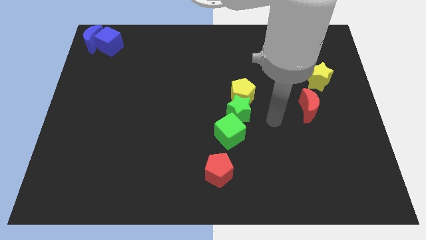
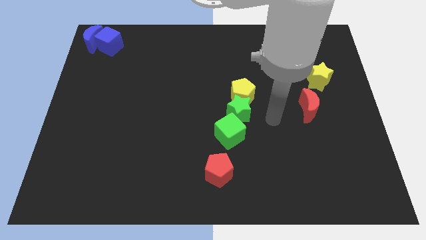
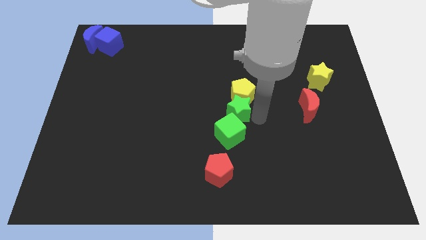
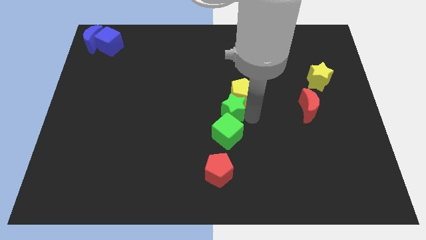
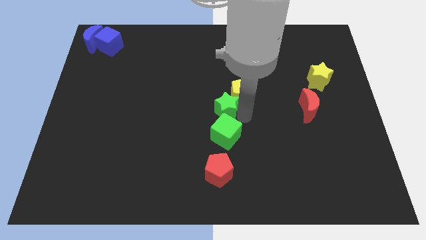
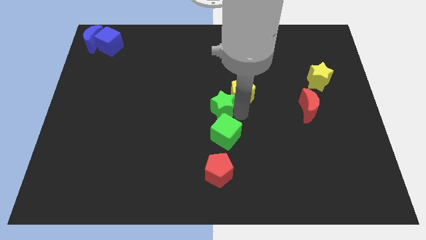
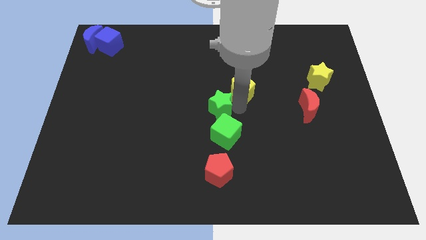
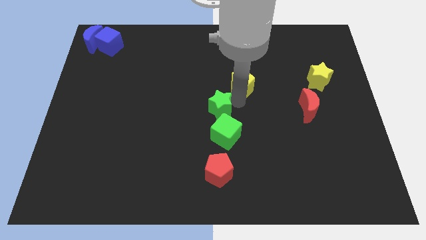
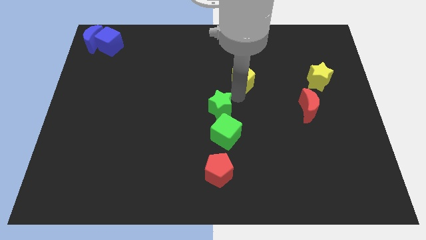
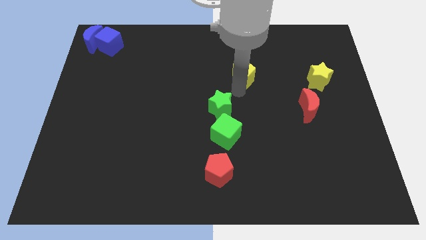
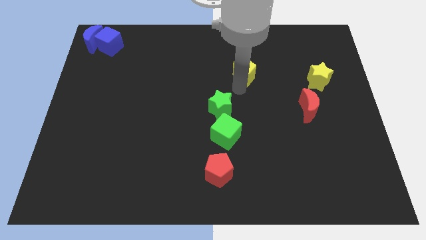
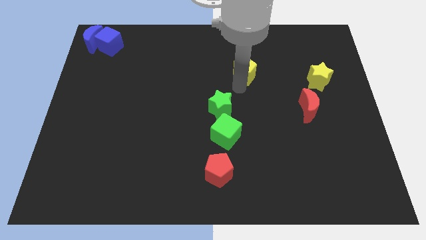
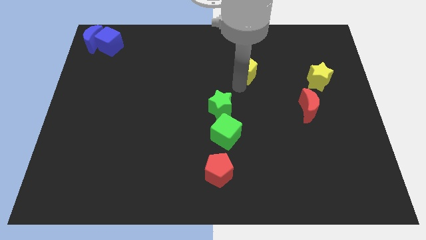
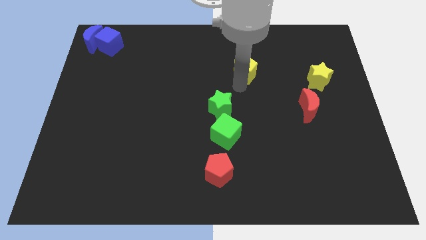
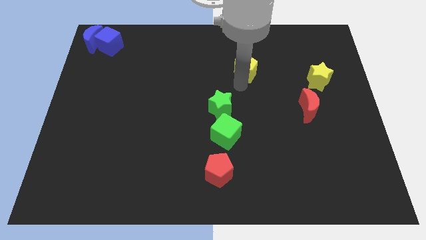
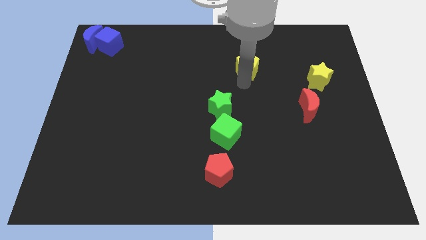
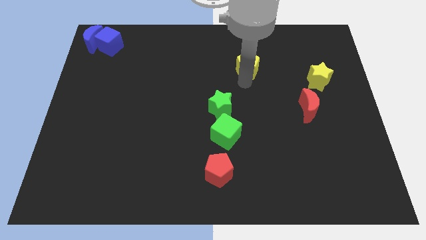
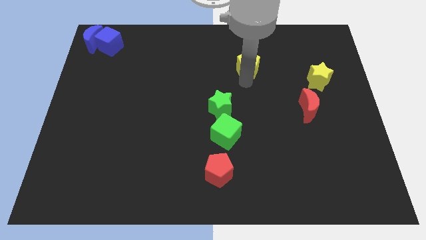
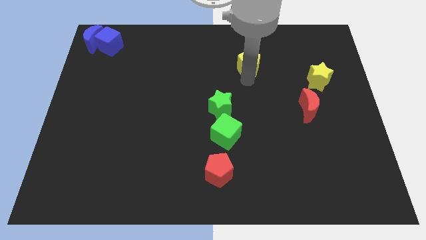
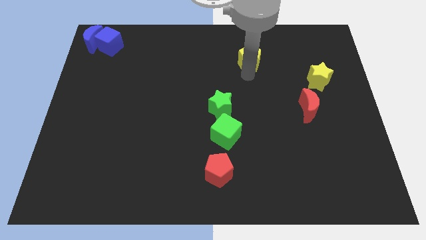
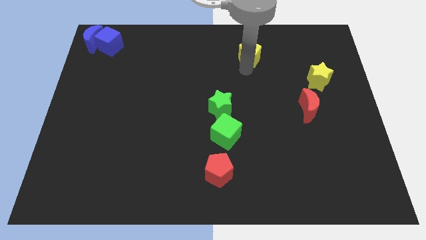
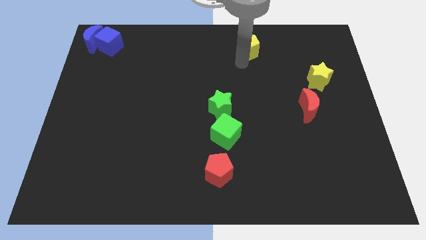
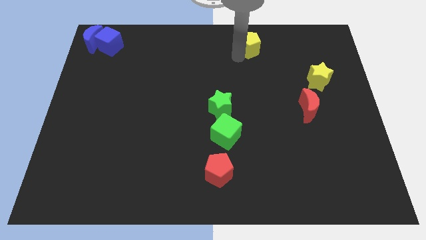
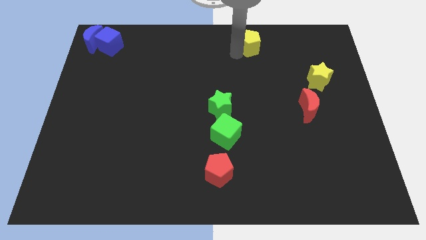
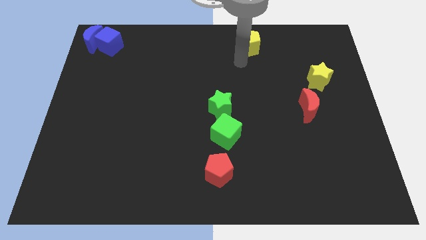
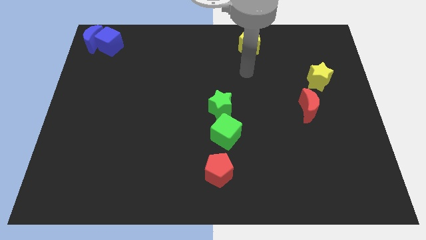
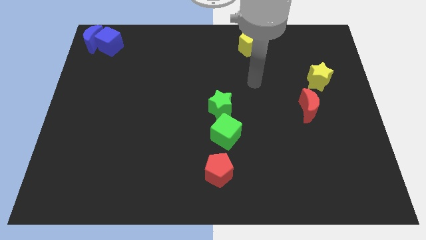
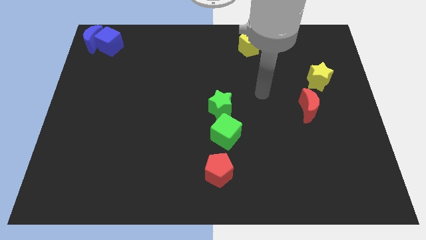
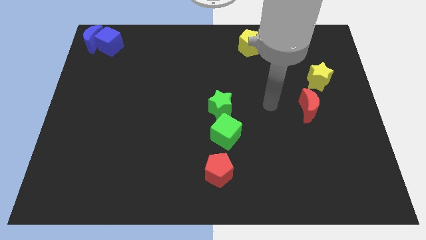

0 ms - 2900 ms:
move the yellow pentagon to the center top

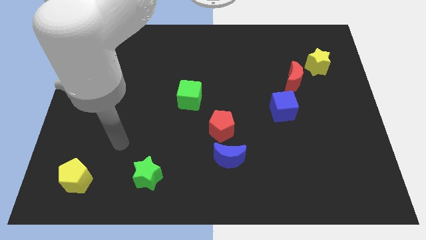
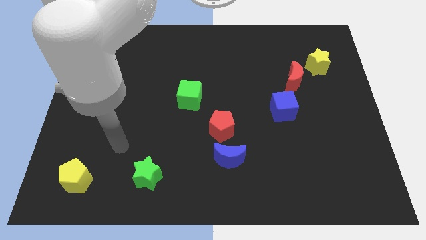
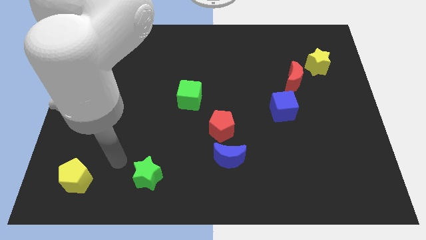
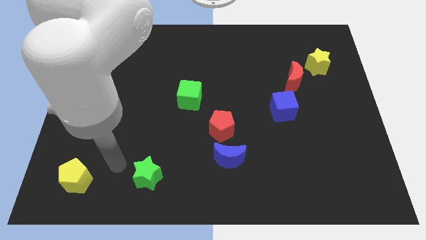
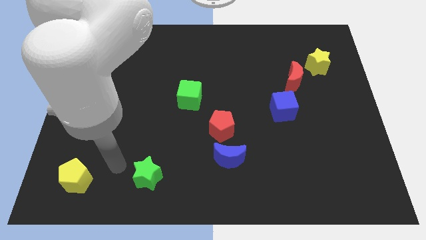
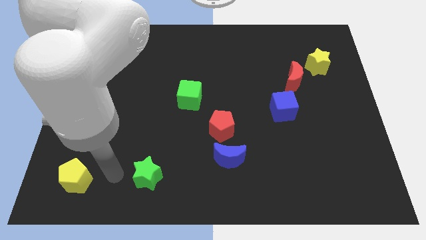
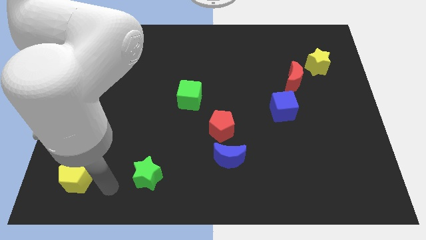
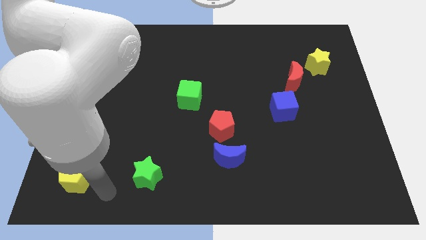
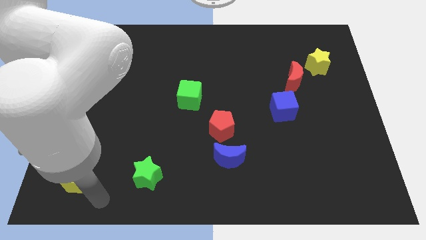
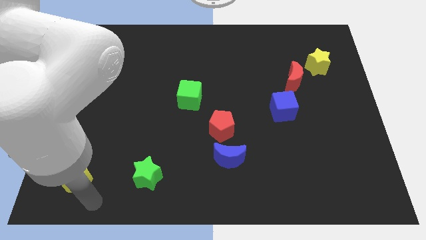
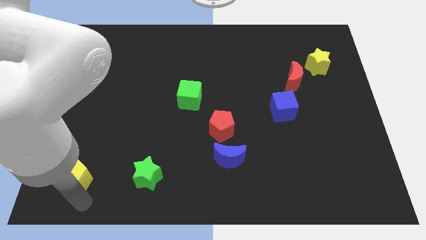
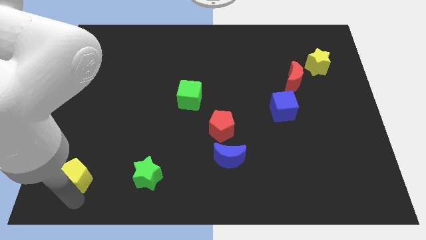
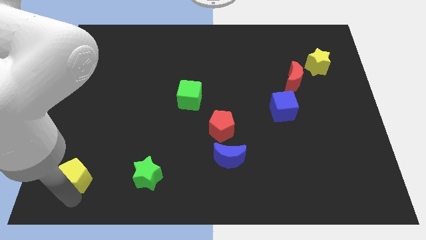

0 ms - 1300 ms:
point your arm at the bottom of the yellow pentagon

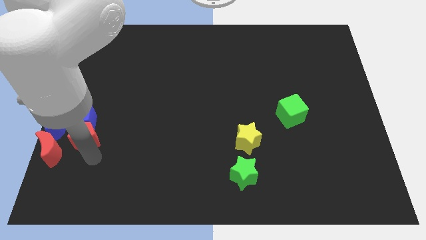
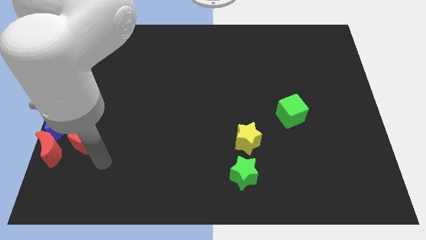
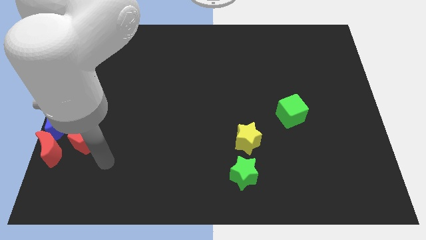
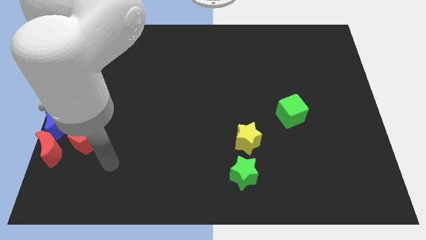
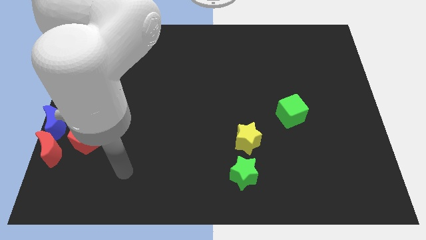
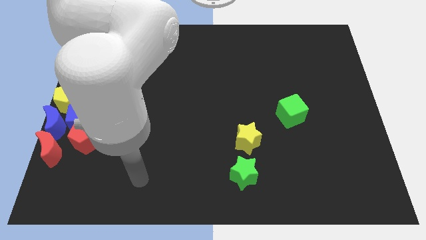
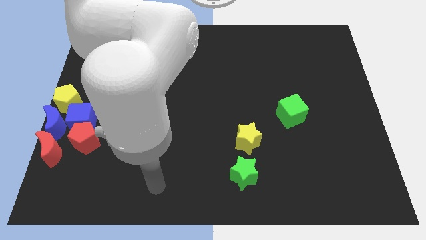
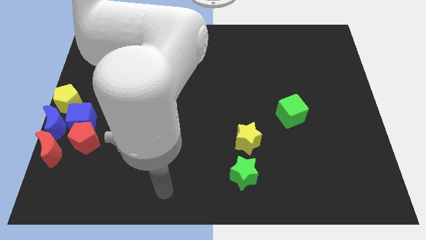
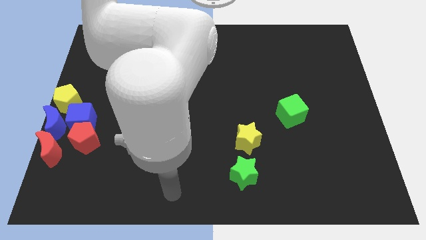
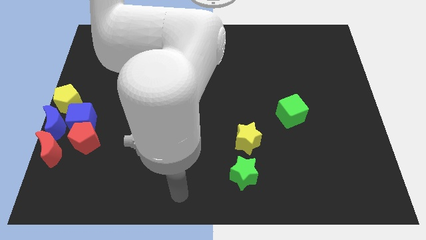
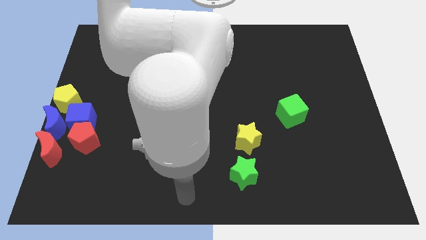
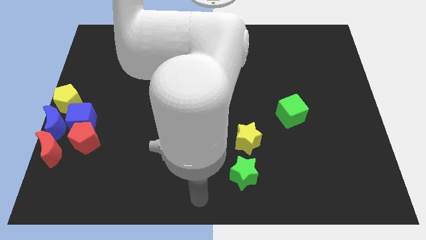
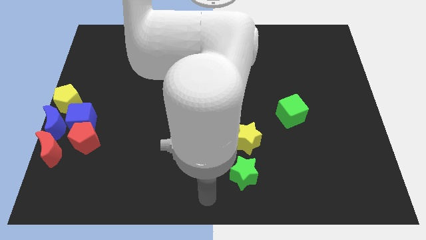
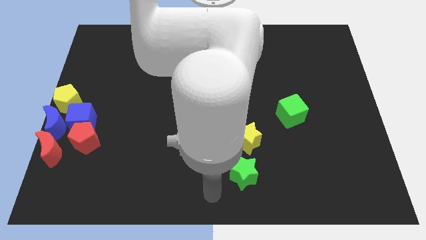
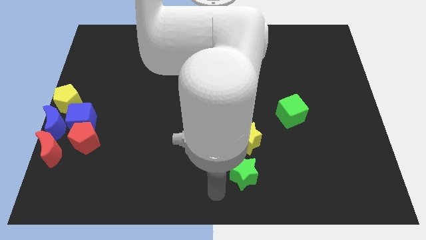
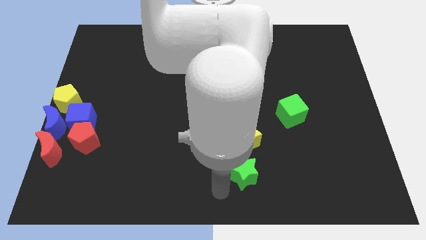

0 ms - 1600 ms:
move yourself close to the bottom left side of the green star

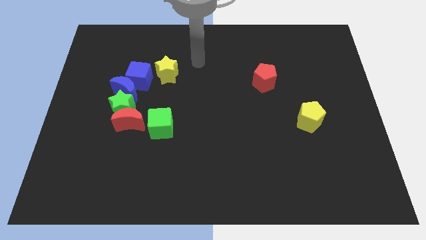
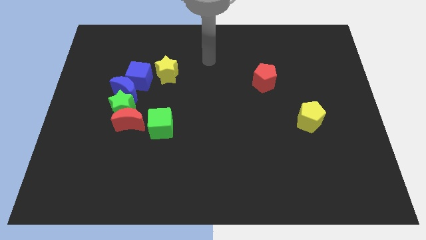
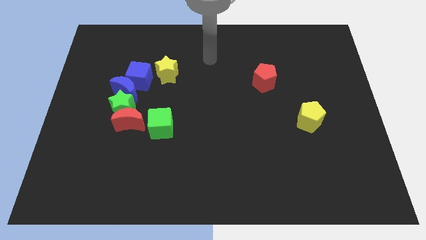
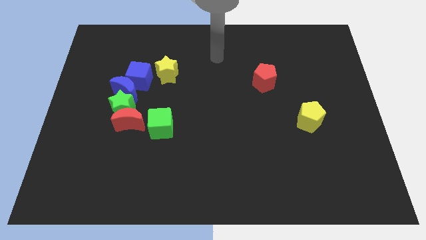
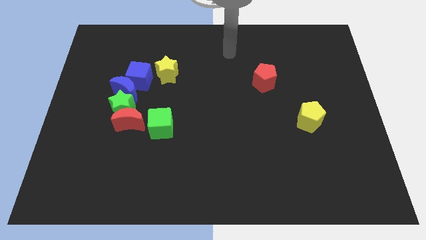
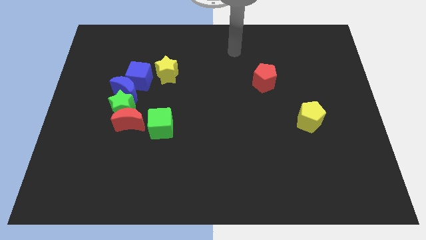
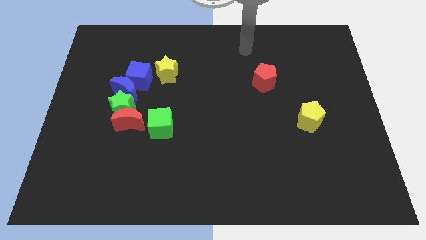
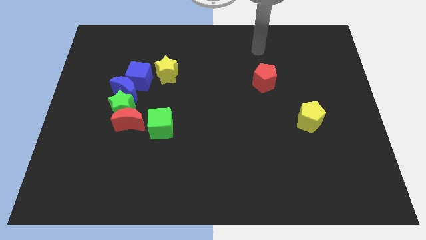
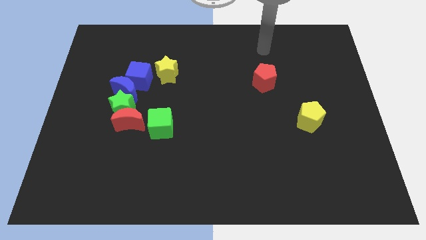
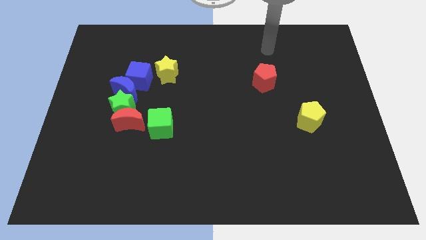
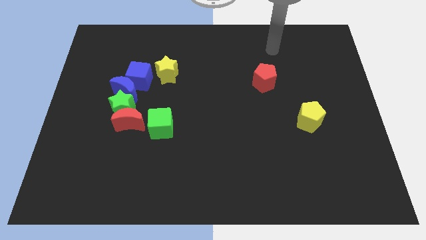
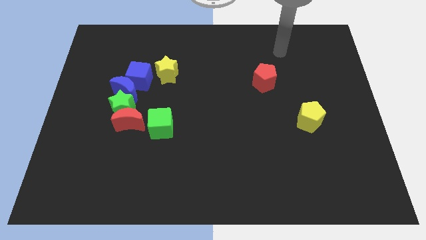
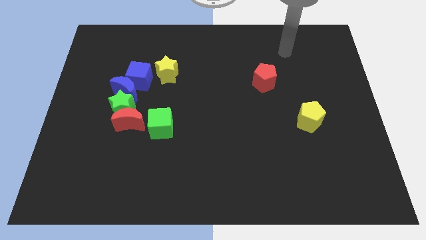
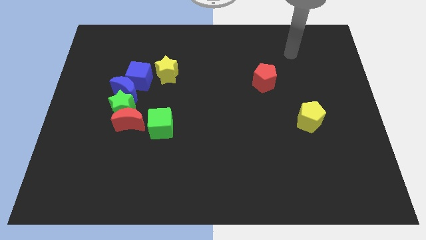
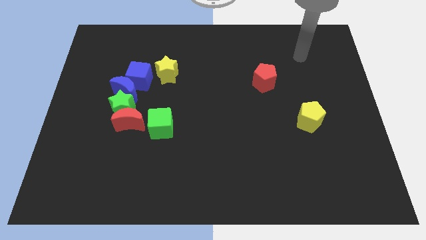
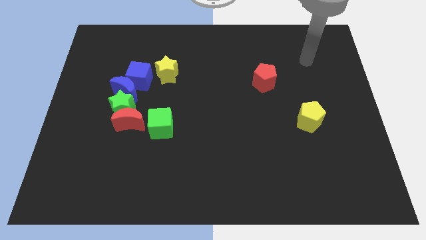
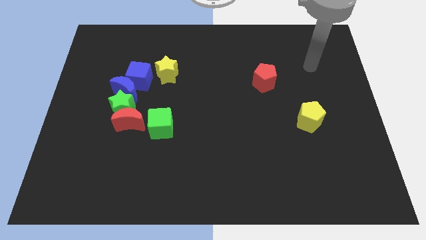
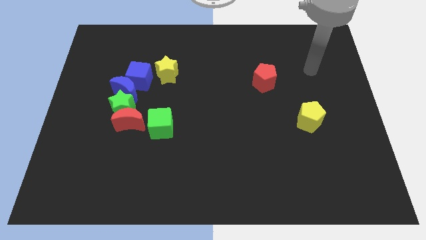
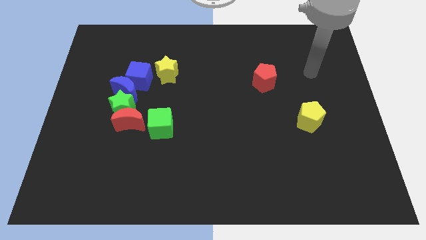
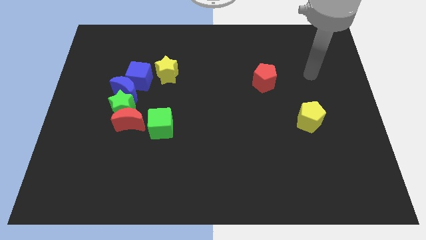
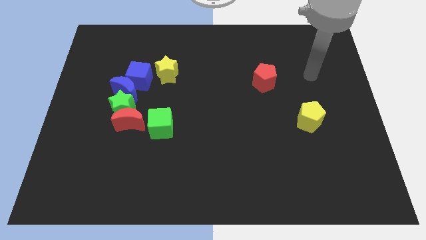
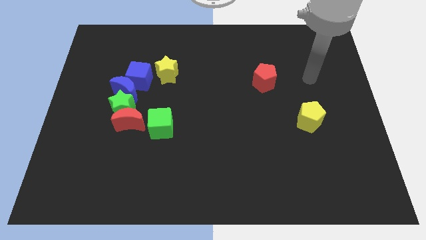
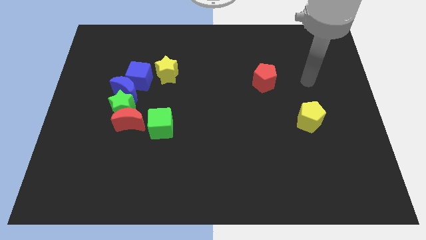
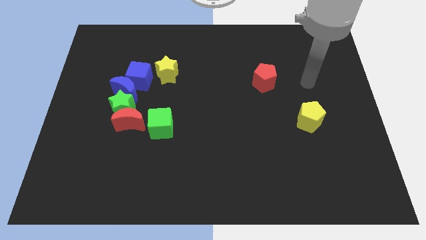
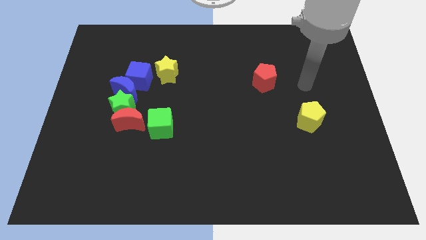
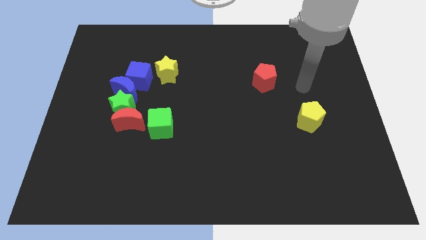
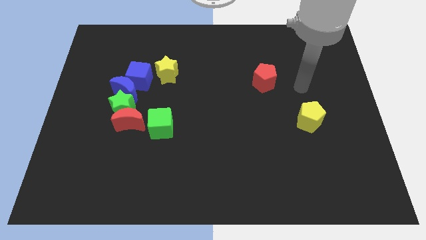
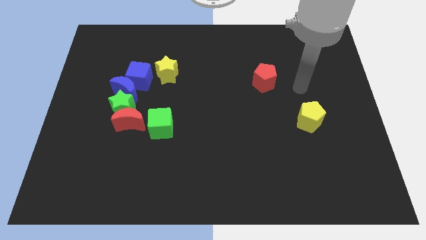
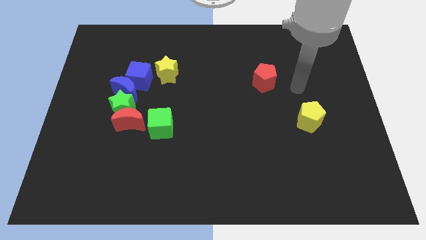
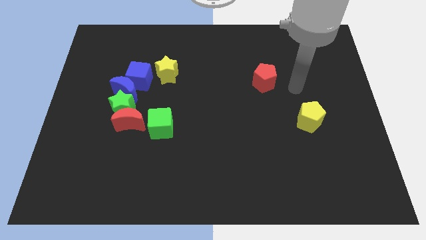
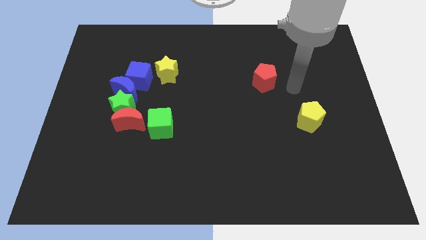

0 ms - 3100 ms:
move your arm away from red pentagon

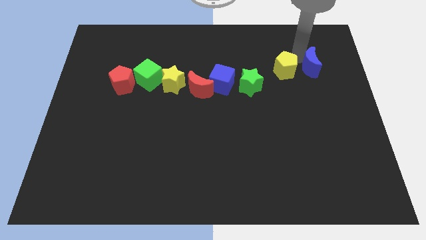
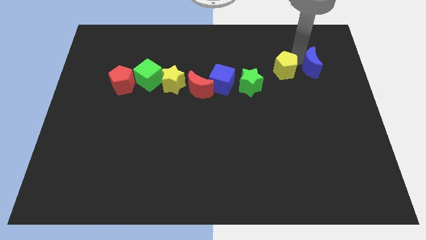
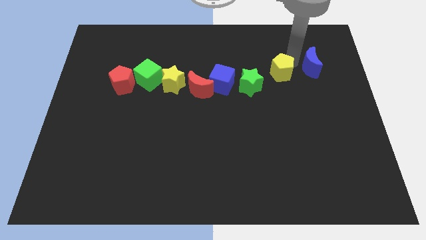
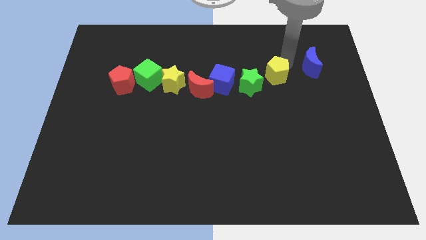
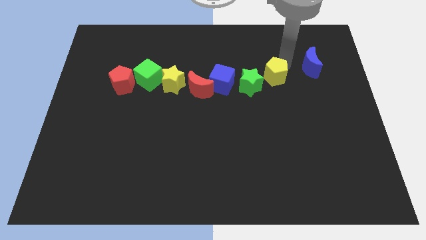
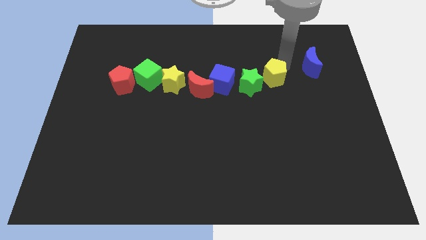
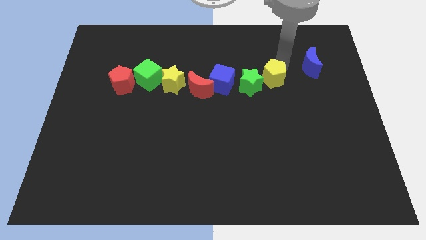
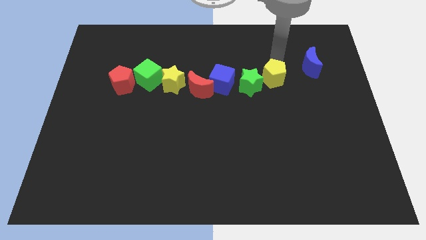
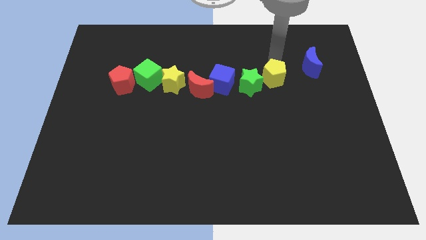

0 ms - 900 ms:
push the yellow pentagon close to the green star
